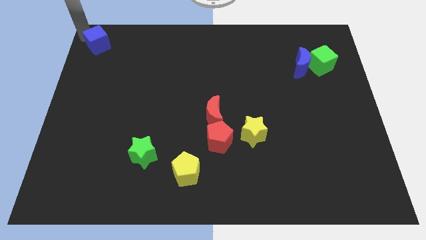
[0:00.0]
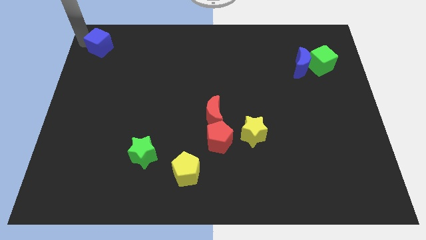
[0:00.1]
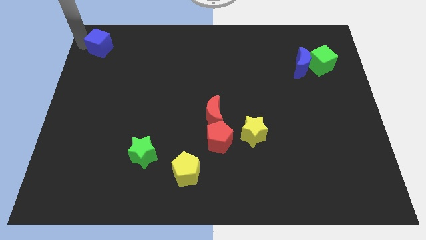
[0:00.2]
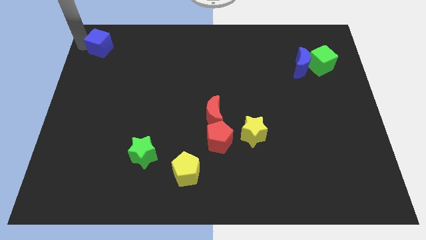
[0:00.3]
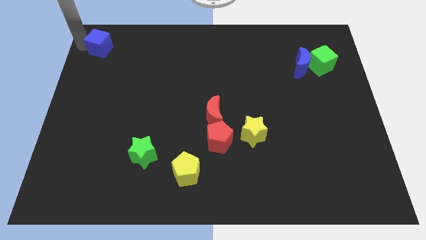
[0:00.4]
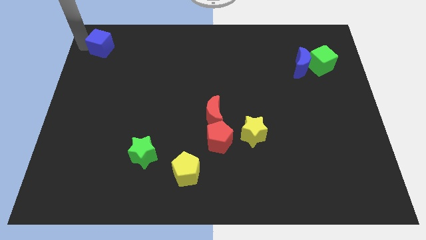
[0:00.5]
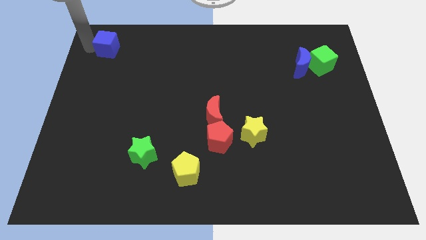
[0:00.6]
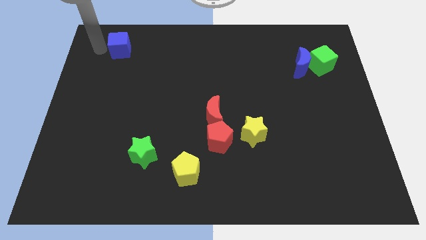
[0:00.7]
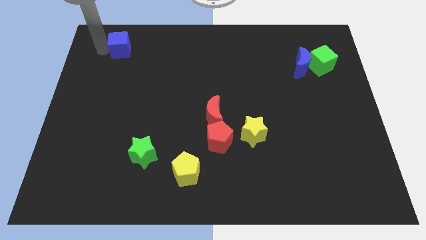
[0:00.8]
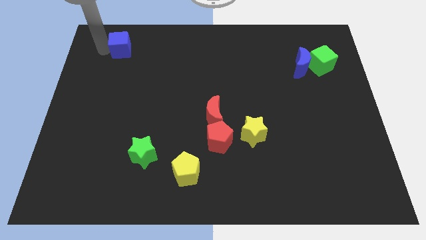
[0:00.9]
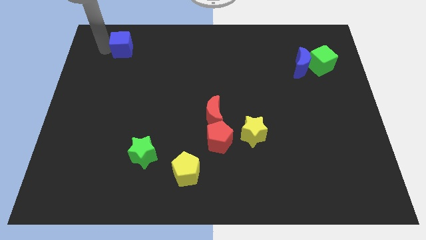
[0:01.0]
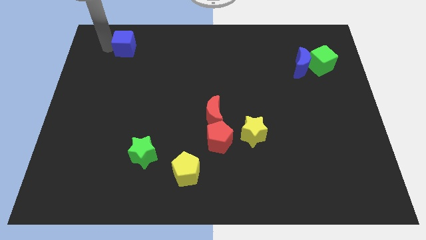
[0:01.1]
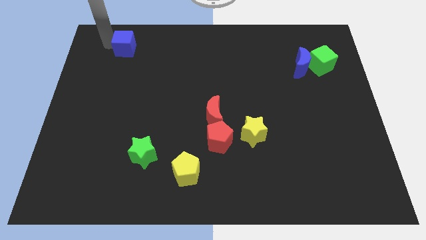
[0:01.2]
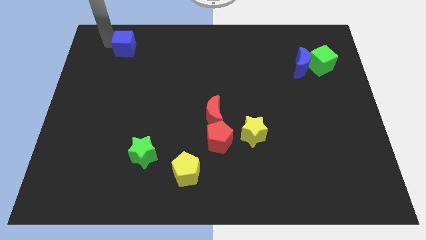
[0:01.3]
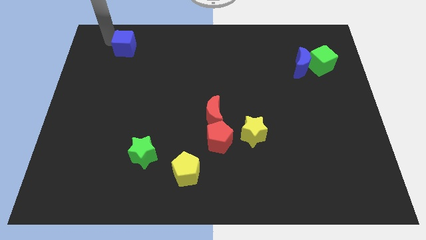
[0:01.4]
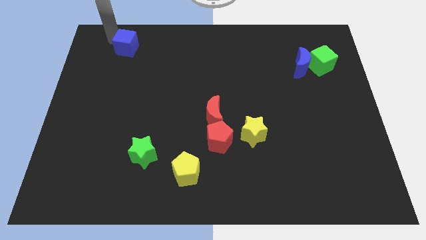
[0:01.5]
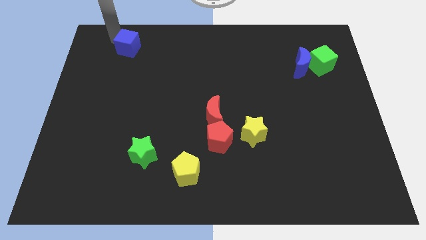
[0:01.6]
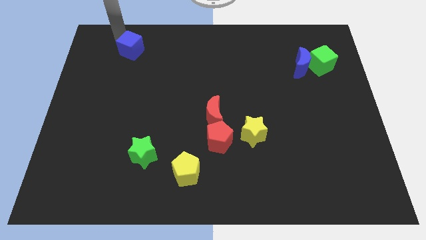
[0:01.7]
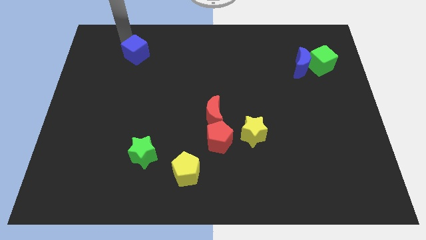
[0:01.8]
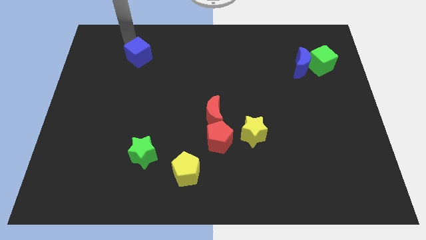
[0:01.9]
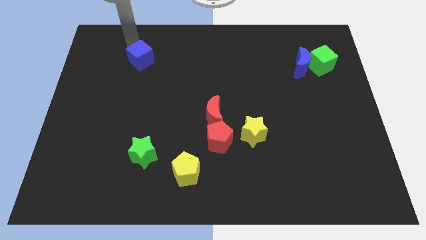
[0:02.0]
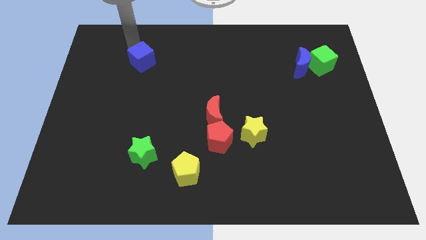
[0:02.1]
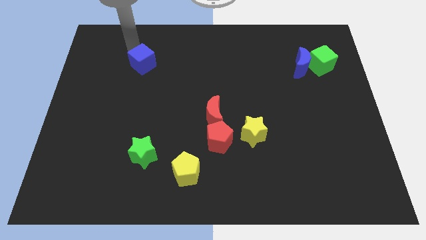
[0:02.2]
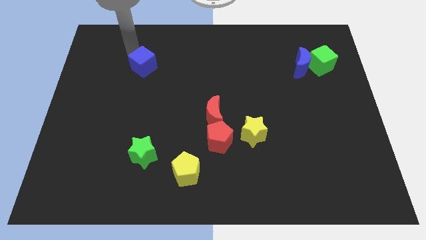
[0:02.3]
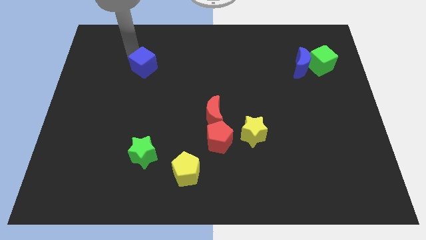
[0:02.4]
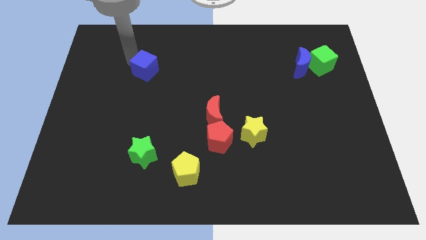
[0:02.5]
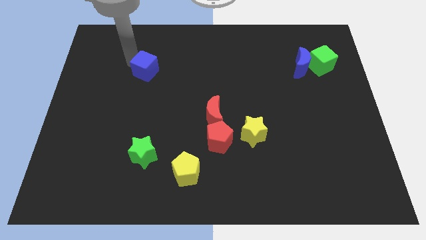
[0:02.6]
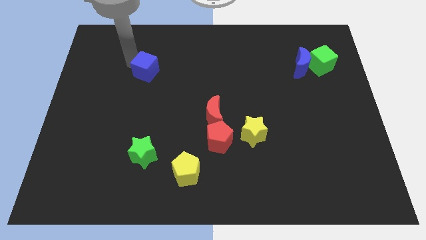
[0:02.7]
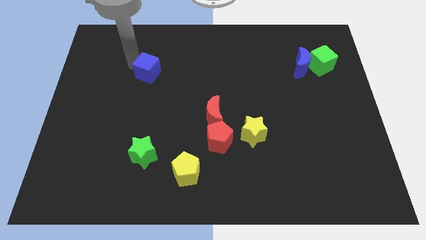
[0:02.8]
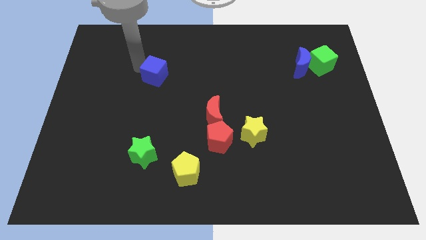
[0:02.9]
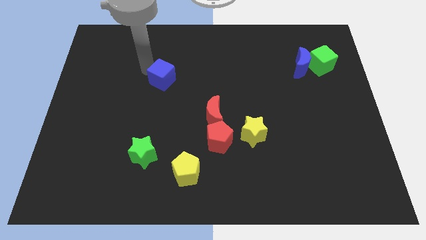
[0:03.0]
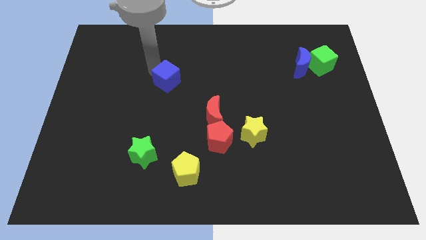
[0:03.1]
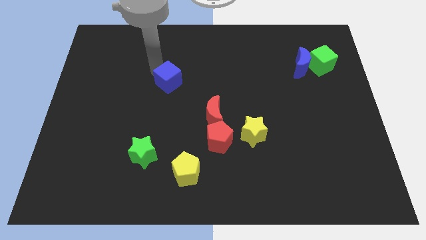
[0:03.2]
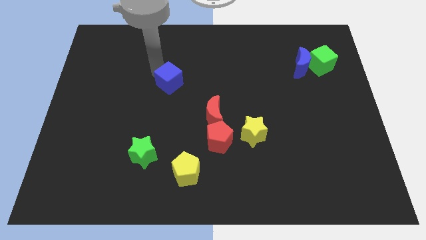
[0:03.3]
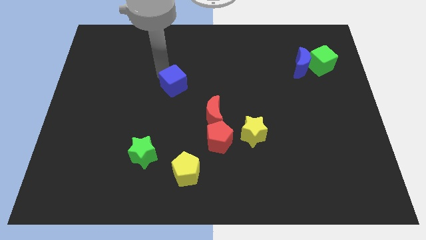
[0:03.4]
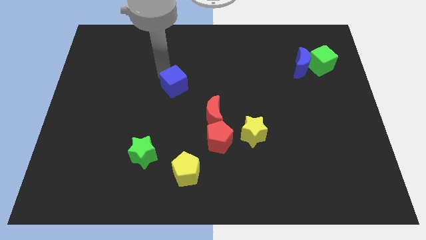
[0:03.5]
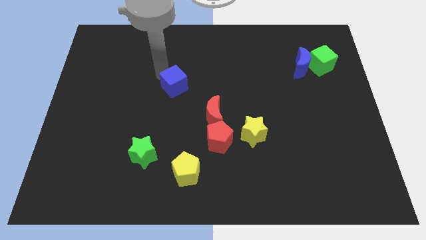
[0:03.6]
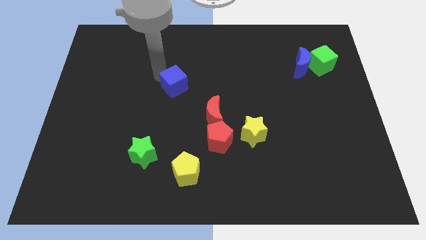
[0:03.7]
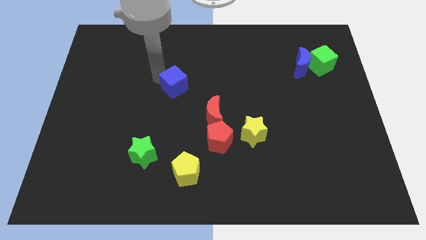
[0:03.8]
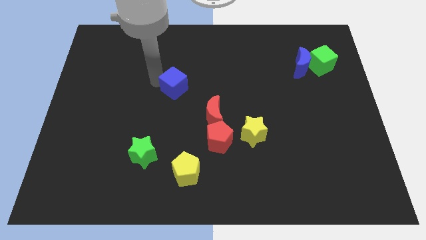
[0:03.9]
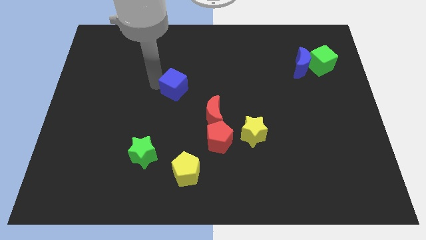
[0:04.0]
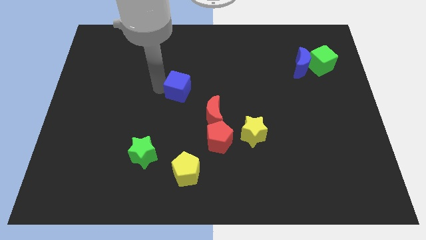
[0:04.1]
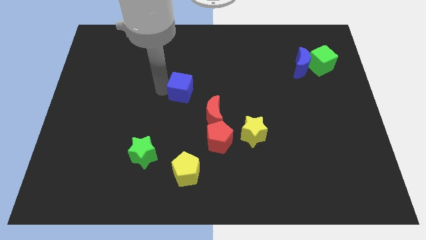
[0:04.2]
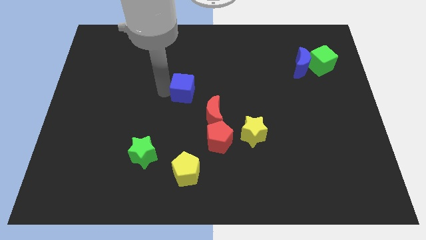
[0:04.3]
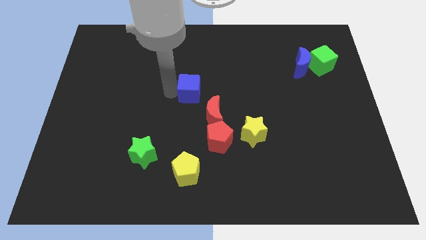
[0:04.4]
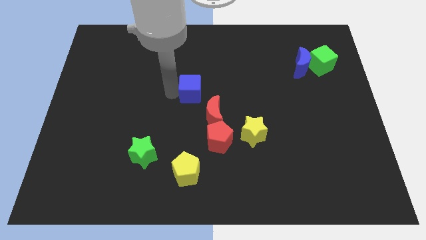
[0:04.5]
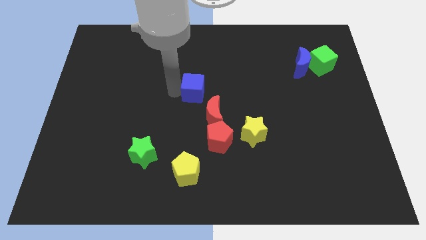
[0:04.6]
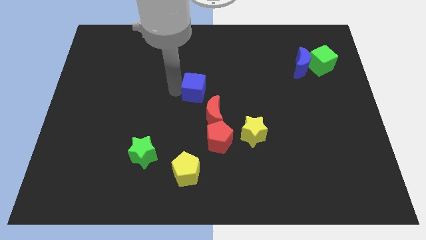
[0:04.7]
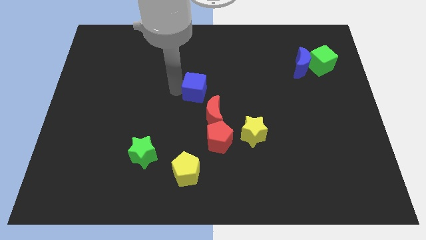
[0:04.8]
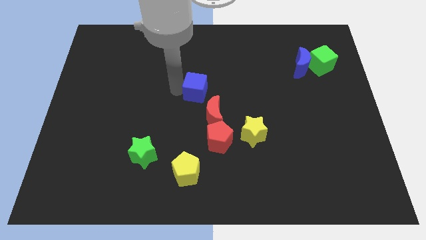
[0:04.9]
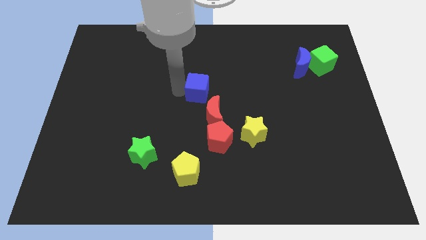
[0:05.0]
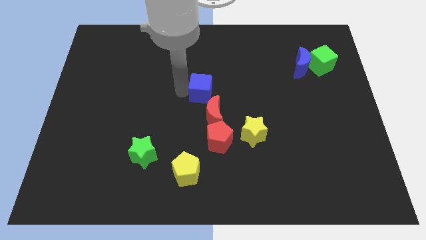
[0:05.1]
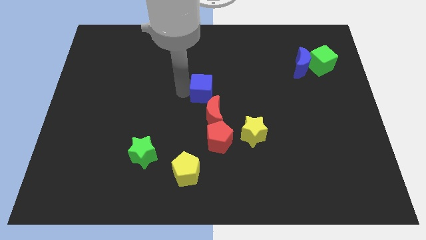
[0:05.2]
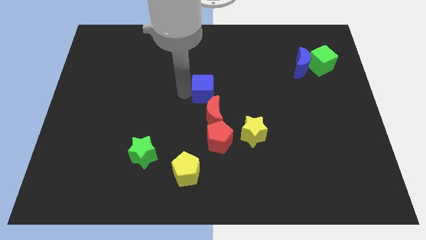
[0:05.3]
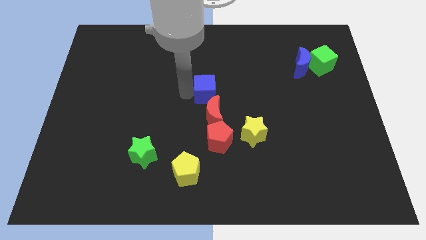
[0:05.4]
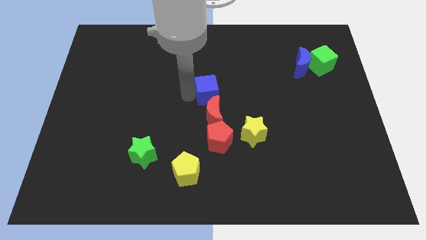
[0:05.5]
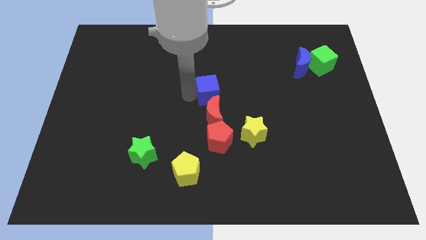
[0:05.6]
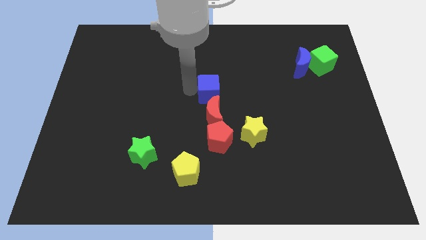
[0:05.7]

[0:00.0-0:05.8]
place blue cube above red crescent

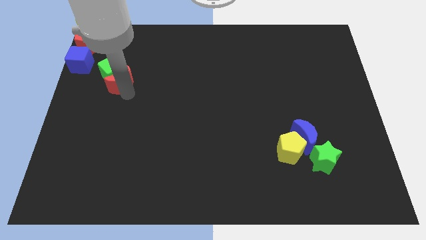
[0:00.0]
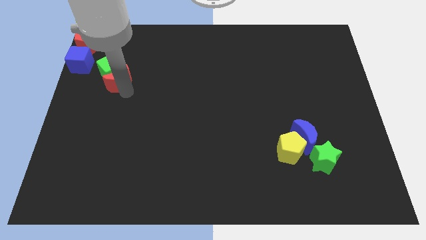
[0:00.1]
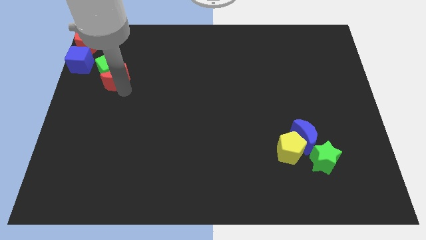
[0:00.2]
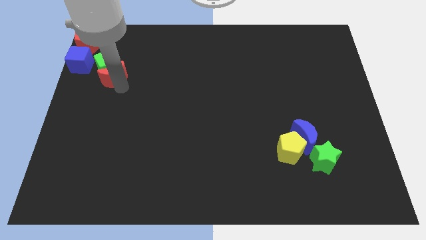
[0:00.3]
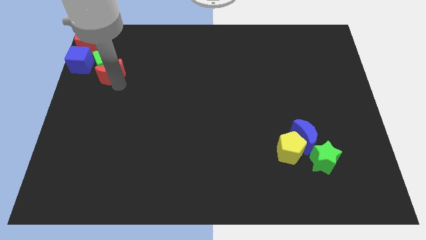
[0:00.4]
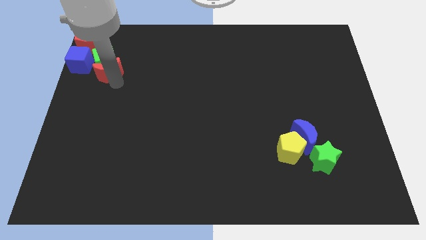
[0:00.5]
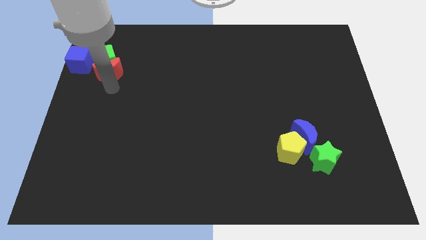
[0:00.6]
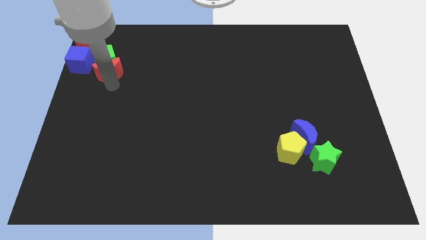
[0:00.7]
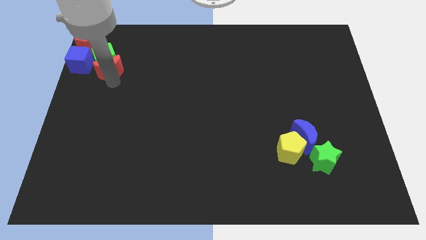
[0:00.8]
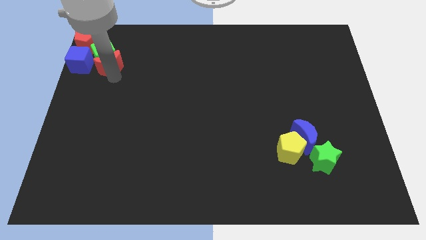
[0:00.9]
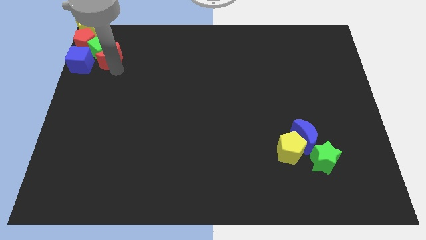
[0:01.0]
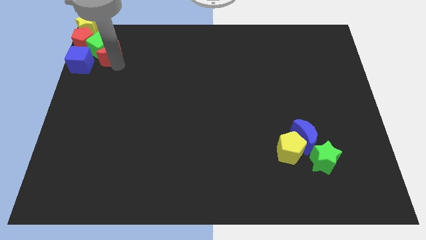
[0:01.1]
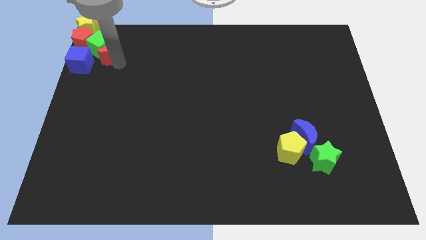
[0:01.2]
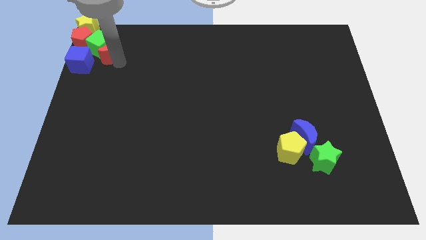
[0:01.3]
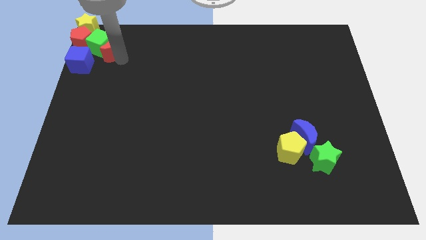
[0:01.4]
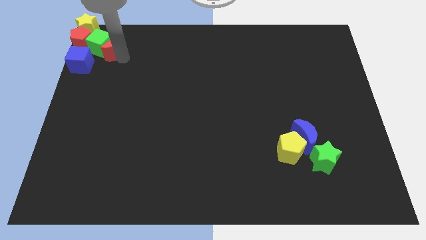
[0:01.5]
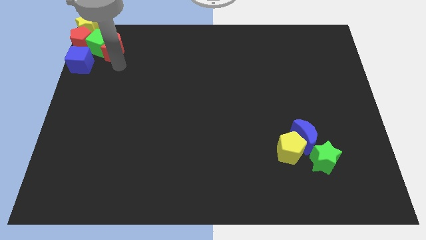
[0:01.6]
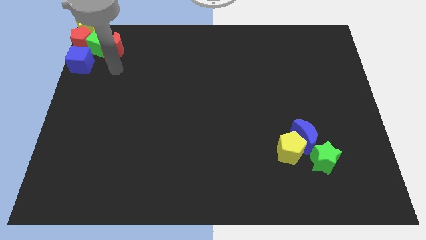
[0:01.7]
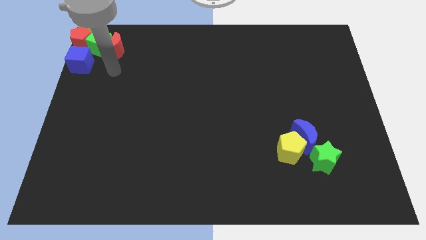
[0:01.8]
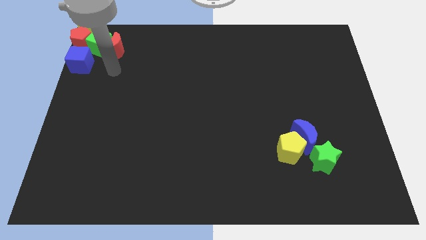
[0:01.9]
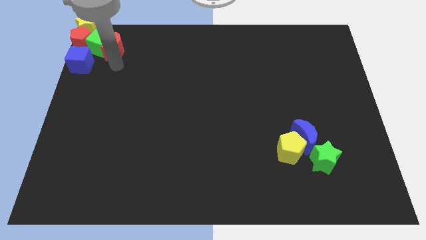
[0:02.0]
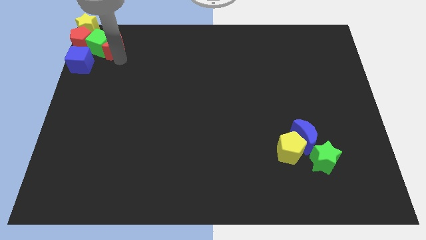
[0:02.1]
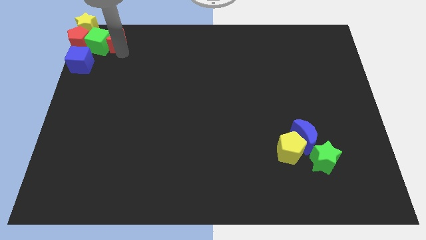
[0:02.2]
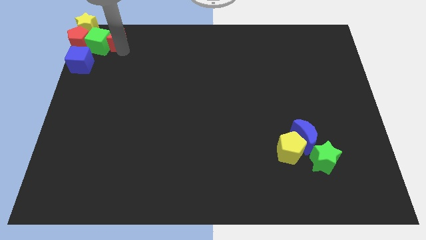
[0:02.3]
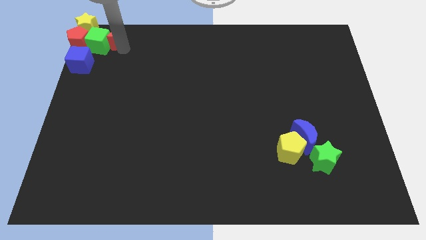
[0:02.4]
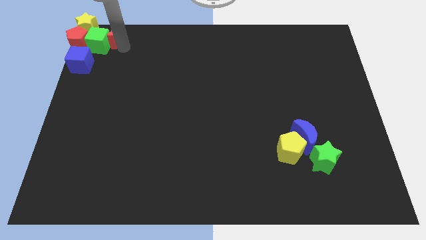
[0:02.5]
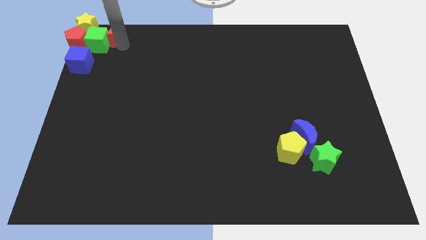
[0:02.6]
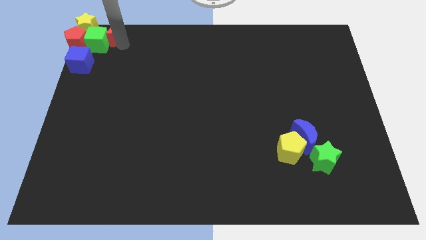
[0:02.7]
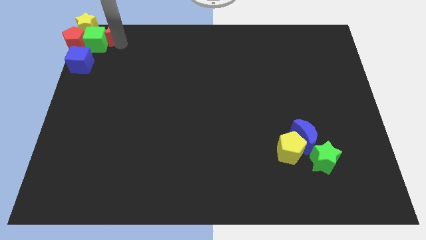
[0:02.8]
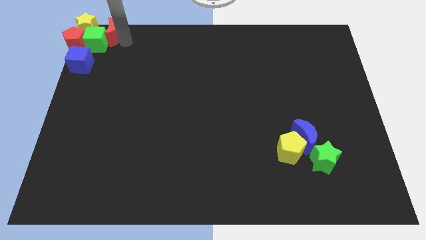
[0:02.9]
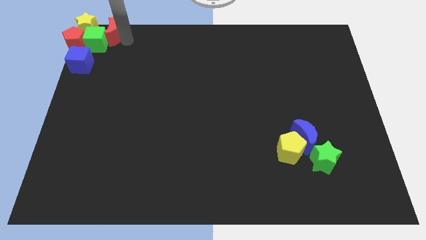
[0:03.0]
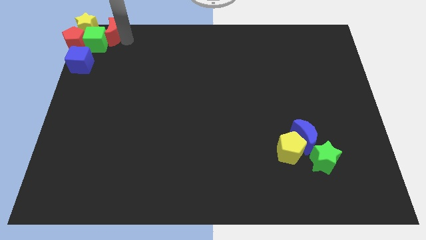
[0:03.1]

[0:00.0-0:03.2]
push the green cube into the red pentagon
